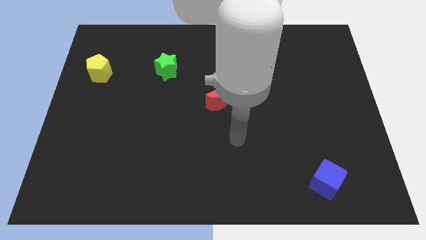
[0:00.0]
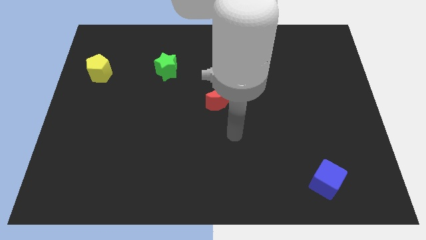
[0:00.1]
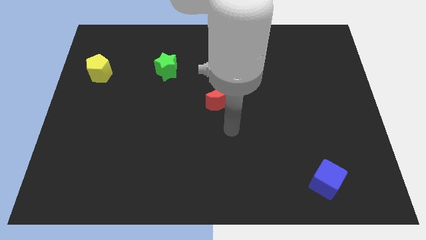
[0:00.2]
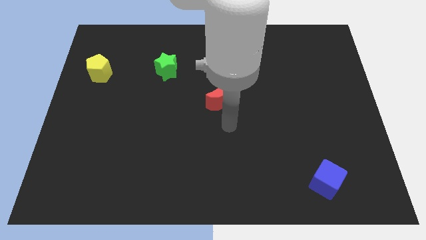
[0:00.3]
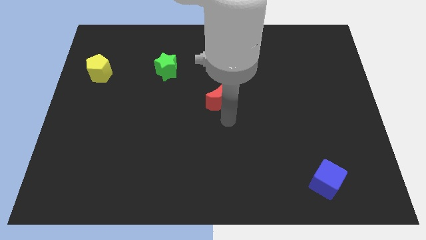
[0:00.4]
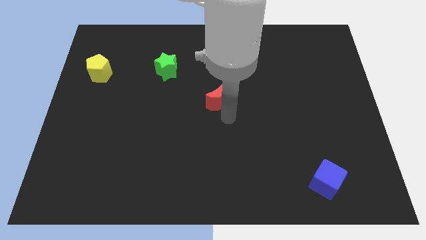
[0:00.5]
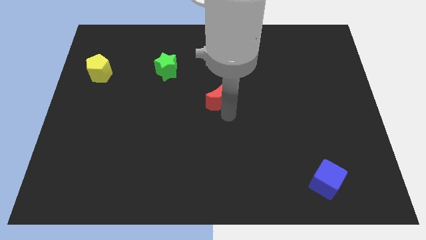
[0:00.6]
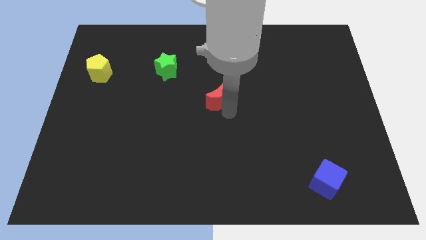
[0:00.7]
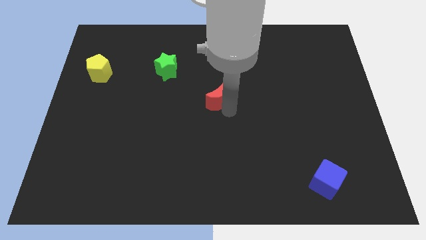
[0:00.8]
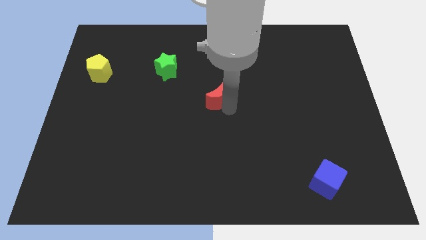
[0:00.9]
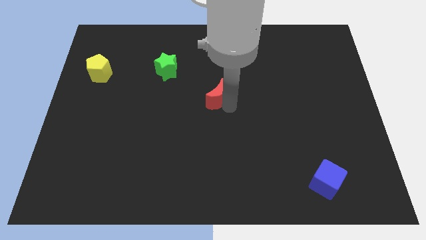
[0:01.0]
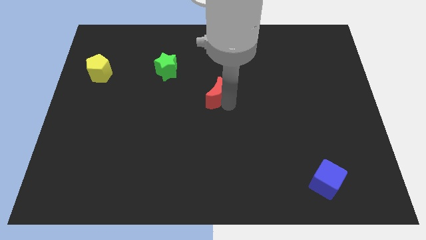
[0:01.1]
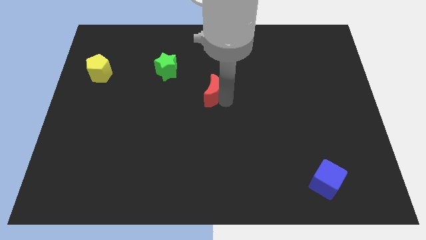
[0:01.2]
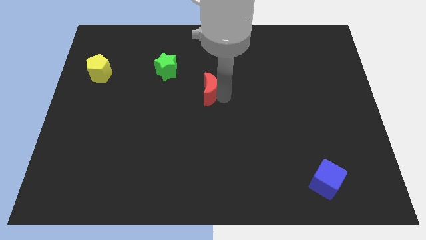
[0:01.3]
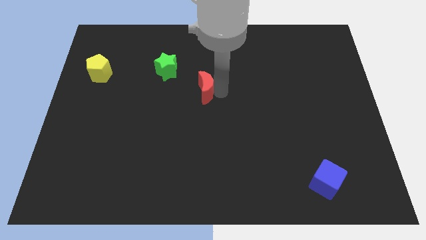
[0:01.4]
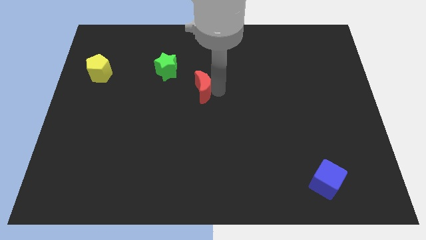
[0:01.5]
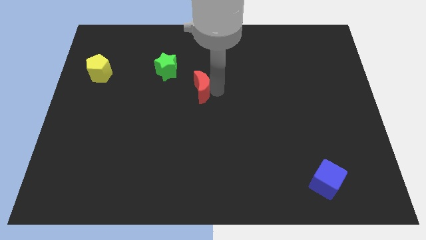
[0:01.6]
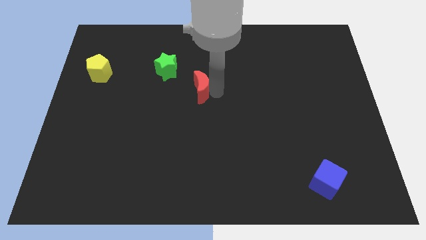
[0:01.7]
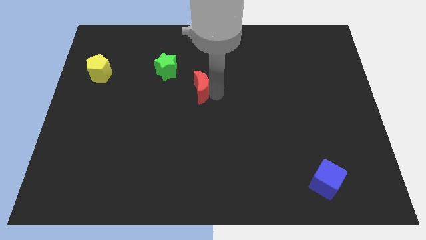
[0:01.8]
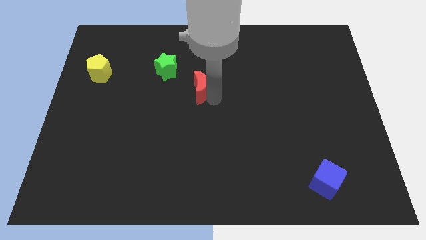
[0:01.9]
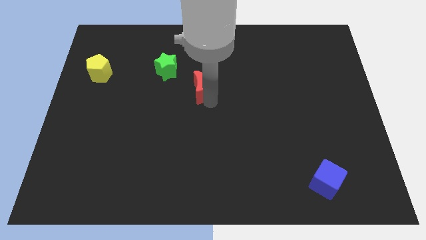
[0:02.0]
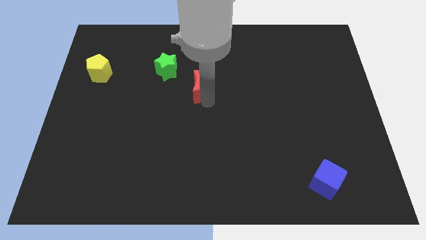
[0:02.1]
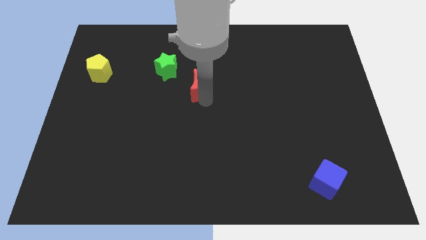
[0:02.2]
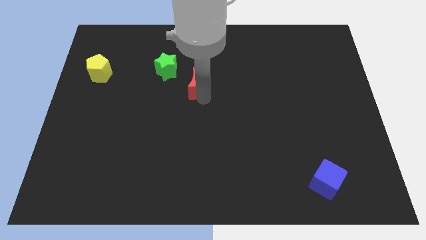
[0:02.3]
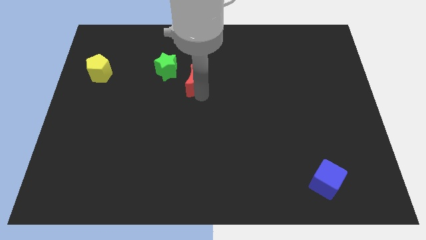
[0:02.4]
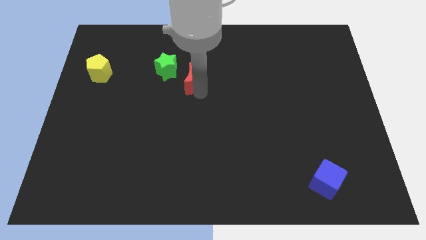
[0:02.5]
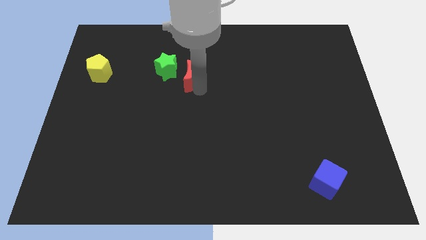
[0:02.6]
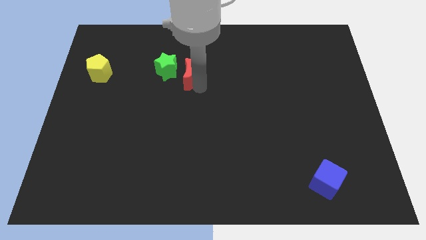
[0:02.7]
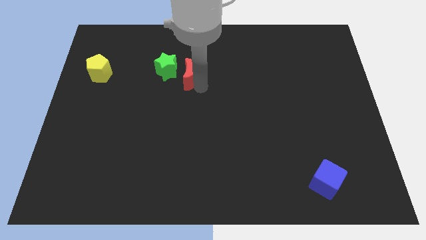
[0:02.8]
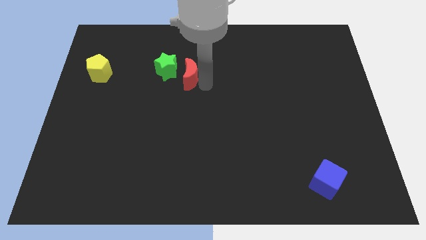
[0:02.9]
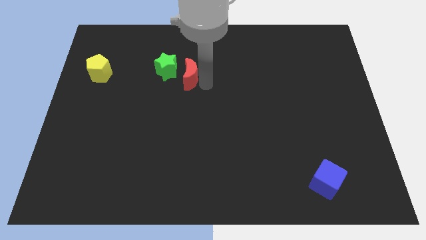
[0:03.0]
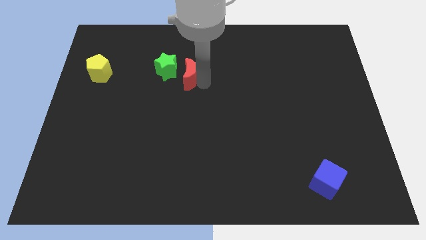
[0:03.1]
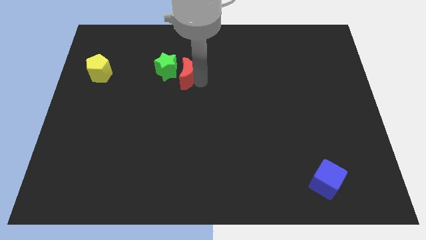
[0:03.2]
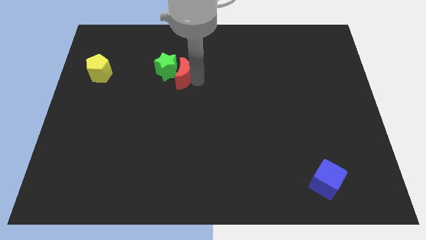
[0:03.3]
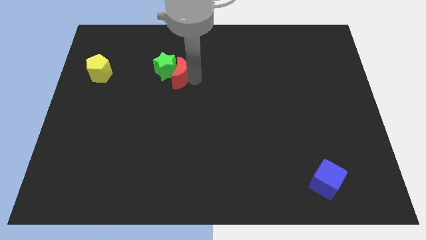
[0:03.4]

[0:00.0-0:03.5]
put the red block to the green star

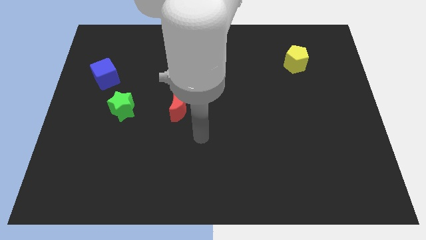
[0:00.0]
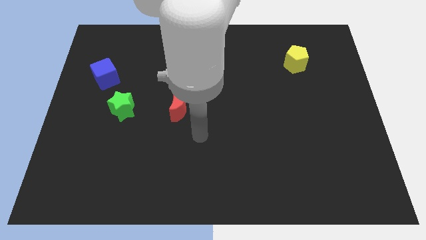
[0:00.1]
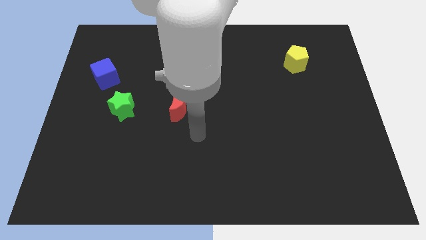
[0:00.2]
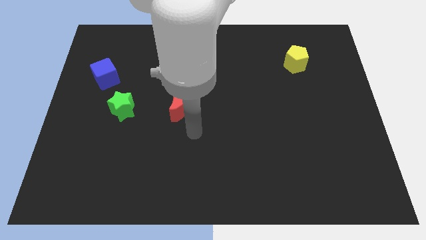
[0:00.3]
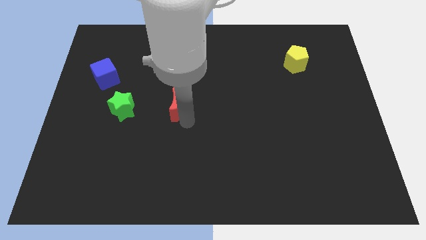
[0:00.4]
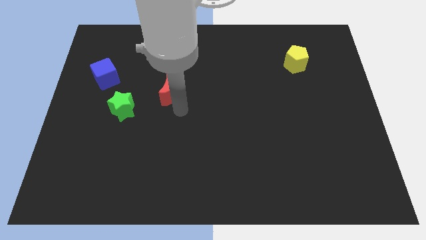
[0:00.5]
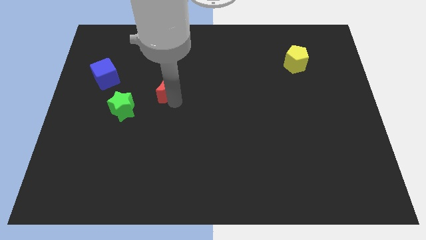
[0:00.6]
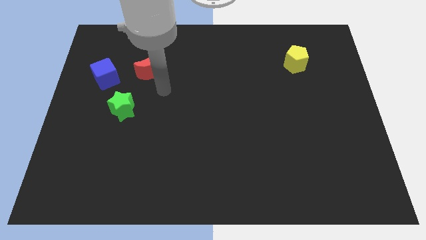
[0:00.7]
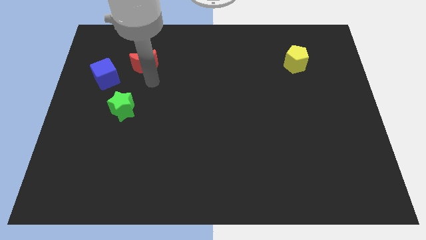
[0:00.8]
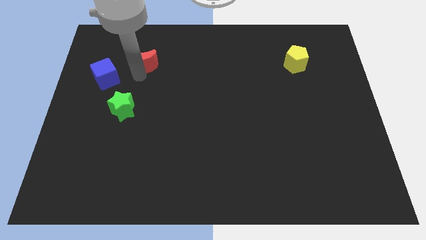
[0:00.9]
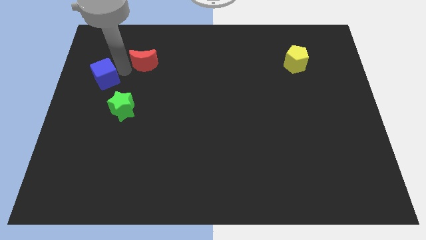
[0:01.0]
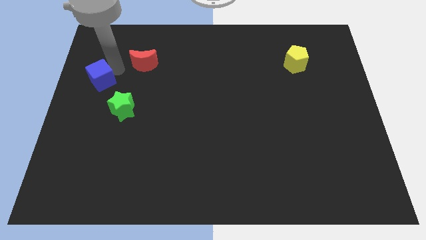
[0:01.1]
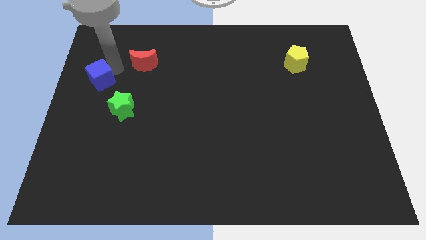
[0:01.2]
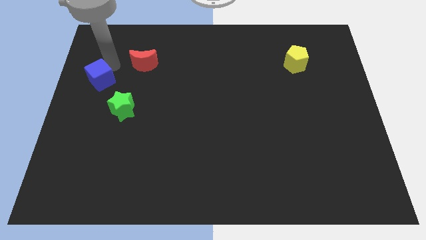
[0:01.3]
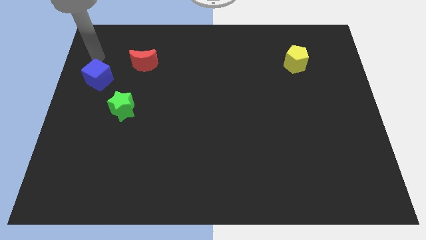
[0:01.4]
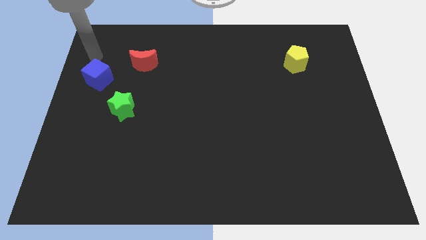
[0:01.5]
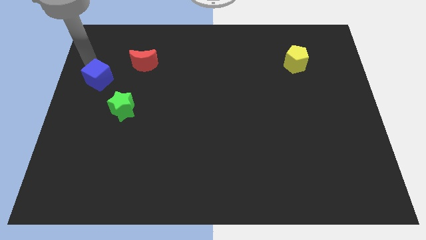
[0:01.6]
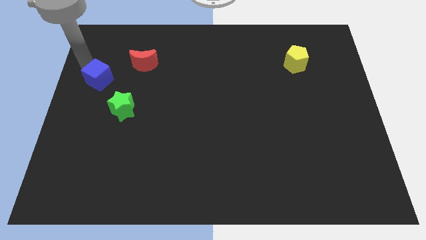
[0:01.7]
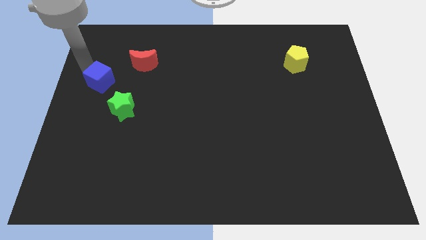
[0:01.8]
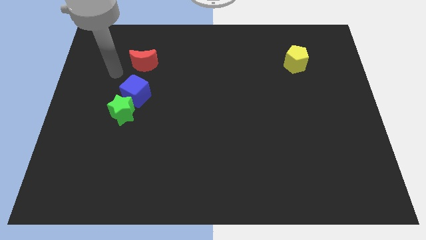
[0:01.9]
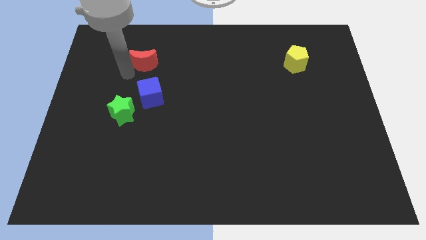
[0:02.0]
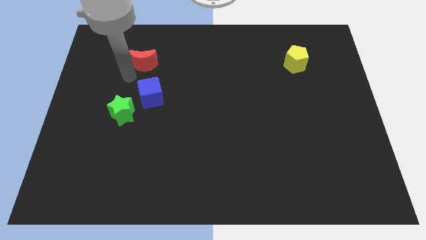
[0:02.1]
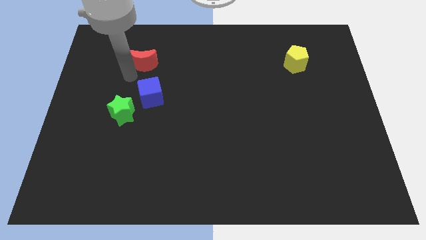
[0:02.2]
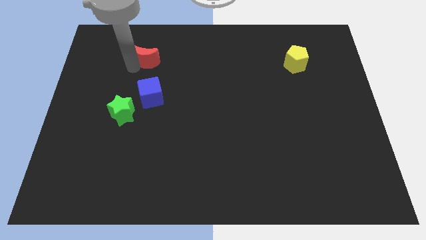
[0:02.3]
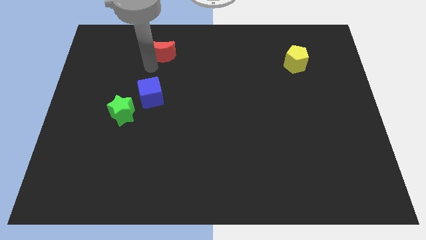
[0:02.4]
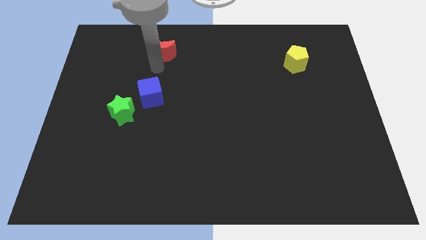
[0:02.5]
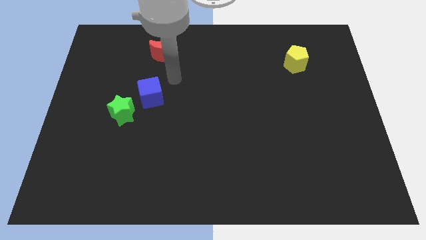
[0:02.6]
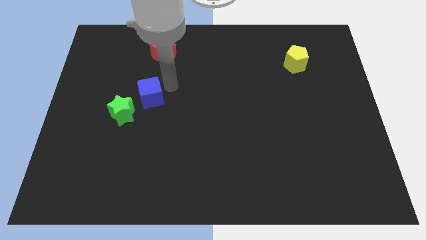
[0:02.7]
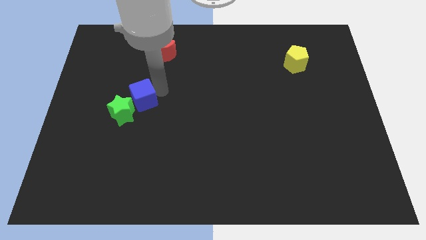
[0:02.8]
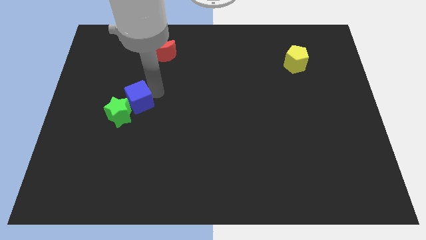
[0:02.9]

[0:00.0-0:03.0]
move the blue block close to the green block

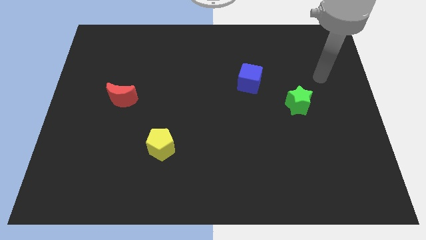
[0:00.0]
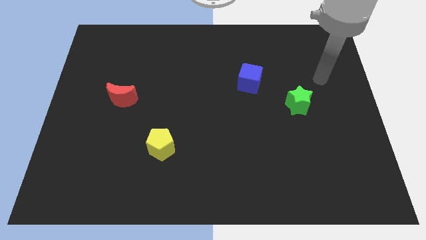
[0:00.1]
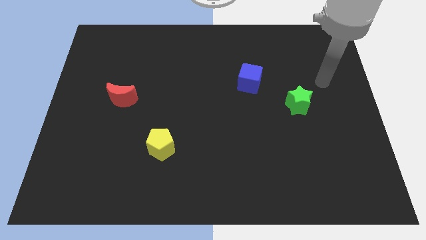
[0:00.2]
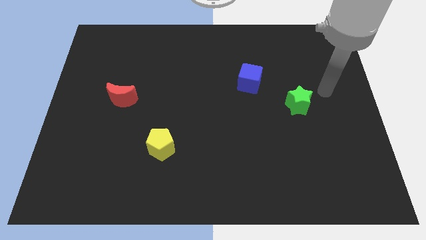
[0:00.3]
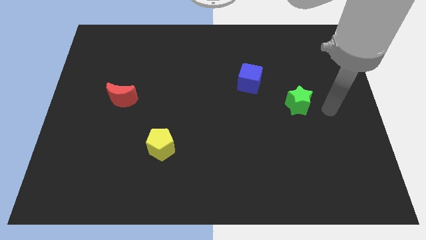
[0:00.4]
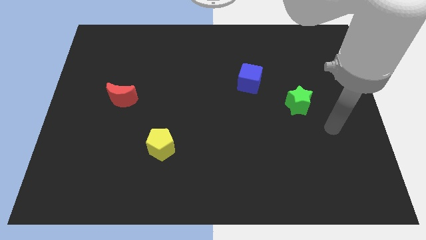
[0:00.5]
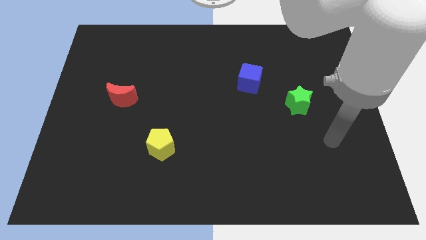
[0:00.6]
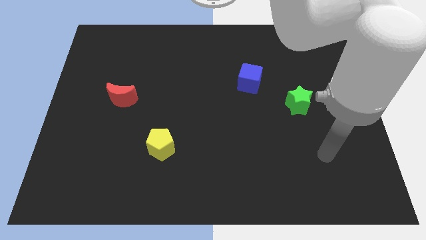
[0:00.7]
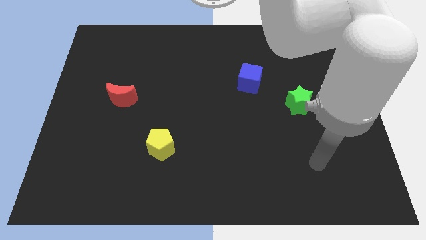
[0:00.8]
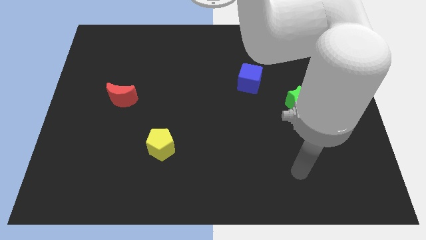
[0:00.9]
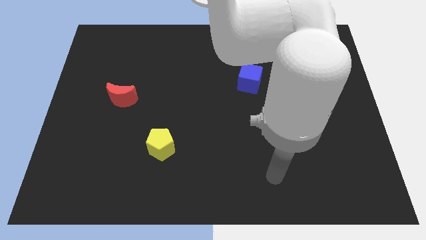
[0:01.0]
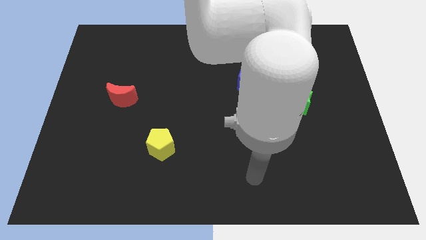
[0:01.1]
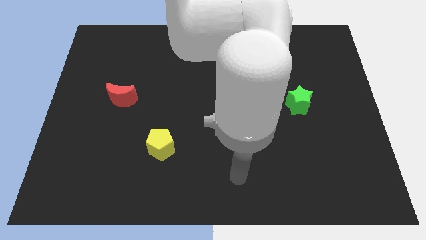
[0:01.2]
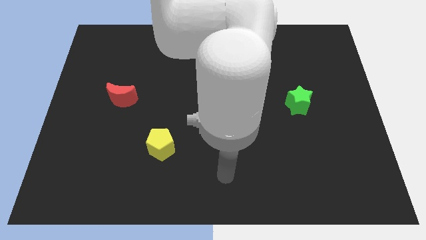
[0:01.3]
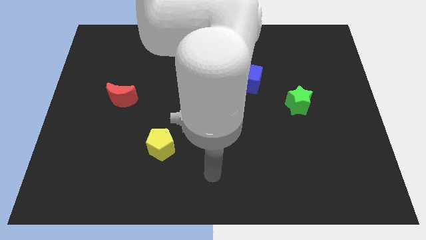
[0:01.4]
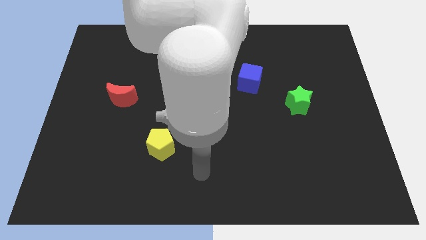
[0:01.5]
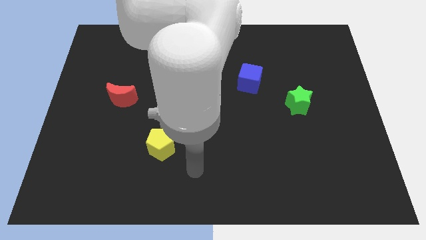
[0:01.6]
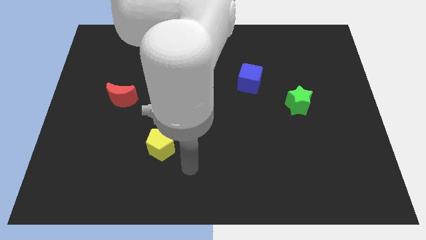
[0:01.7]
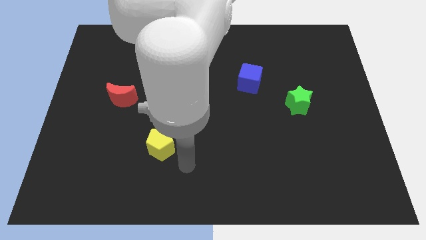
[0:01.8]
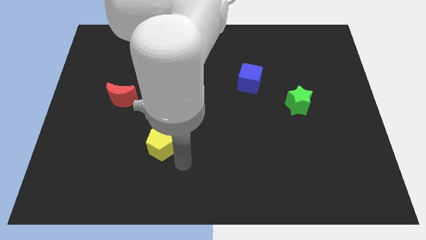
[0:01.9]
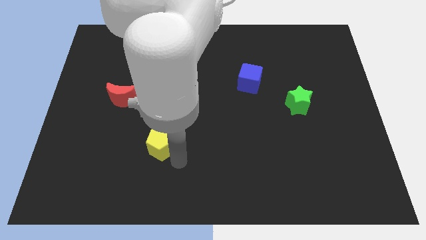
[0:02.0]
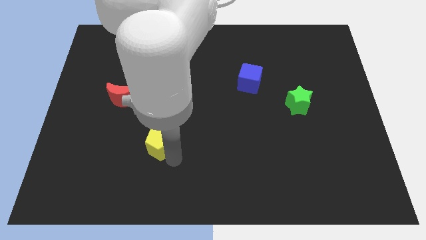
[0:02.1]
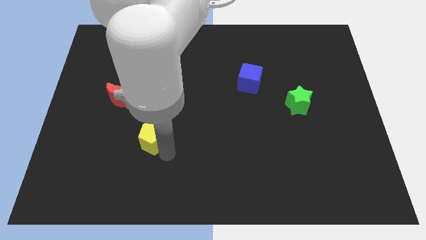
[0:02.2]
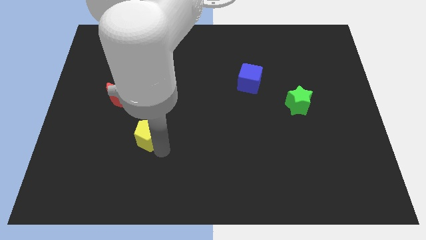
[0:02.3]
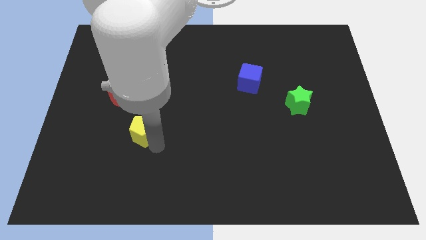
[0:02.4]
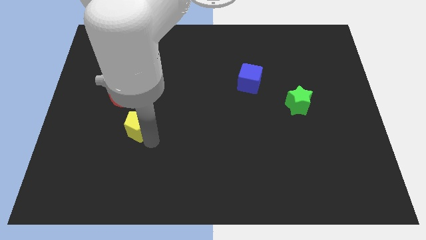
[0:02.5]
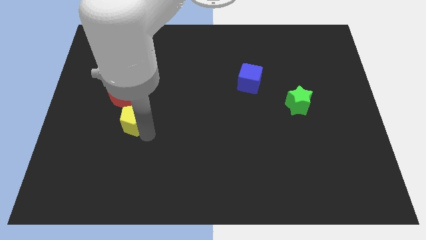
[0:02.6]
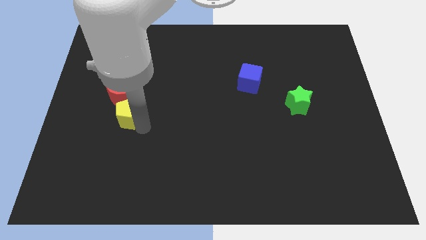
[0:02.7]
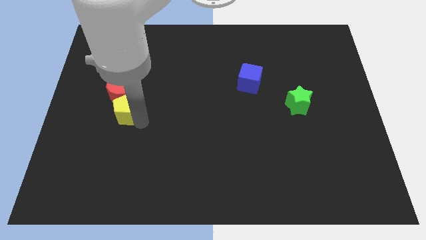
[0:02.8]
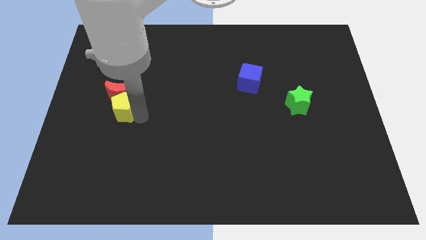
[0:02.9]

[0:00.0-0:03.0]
put the pentagon close to the red block
